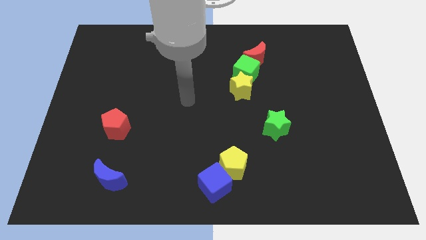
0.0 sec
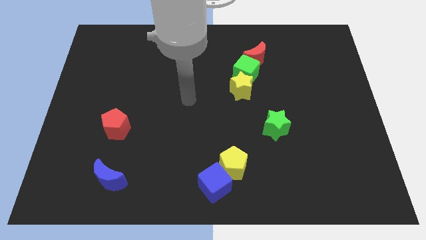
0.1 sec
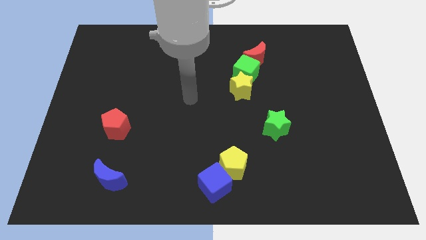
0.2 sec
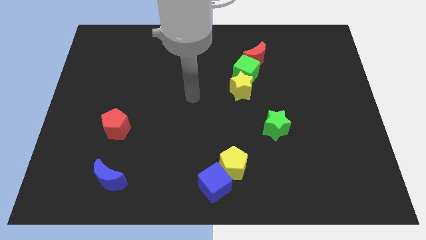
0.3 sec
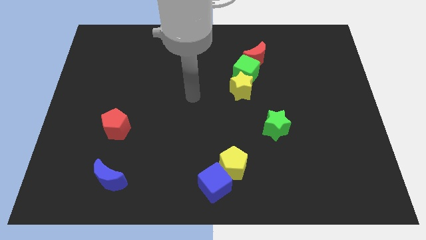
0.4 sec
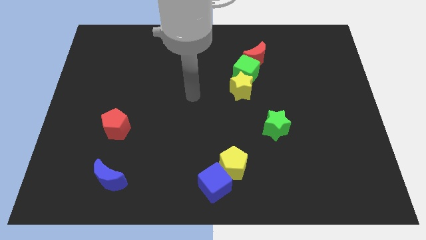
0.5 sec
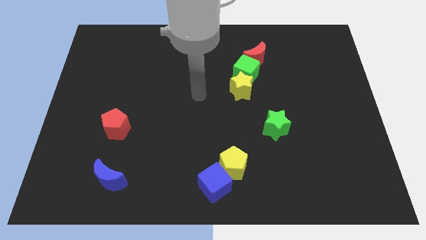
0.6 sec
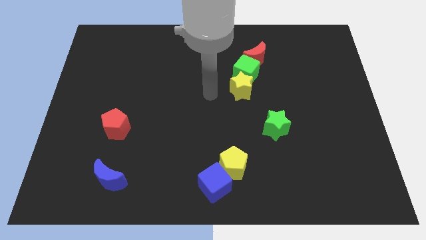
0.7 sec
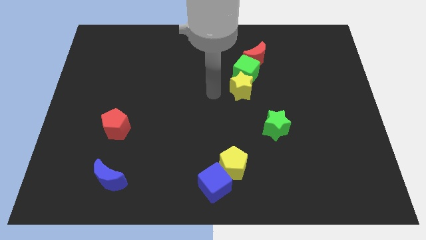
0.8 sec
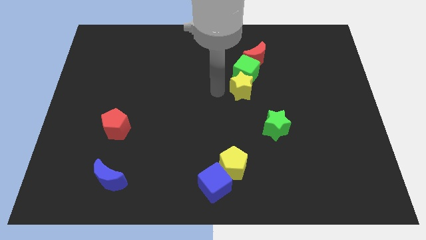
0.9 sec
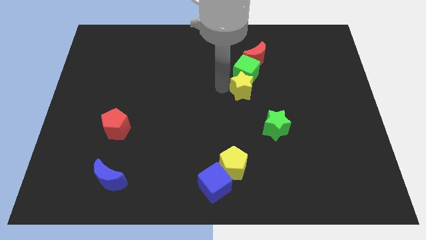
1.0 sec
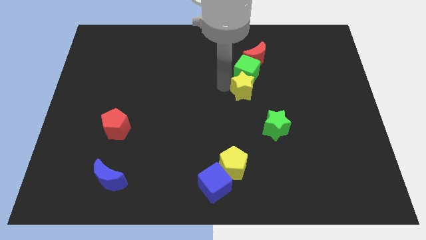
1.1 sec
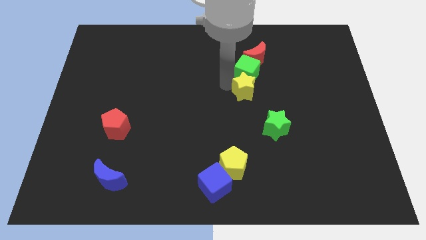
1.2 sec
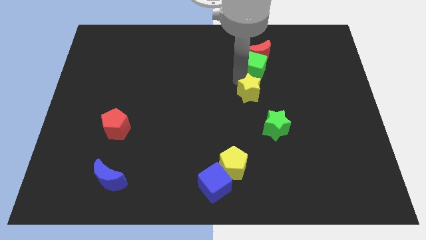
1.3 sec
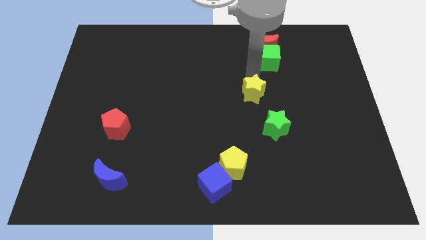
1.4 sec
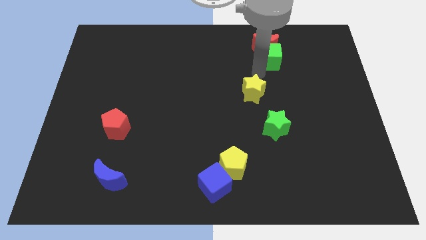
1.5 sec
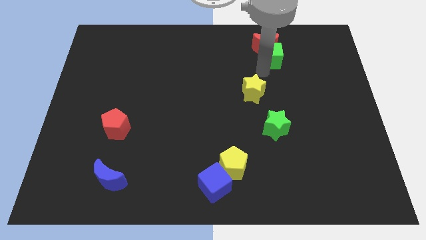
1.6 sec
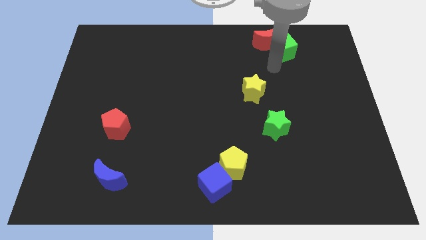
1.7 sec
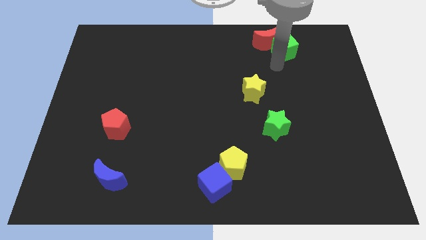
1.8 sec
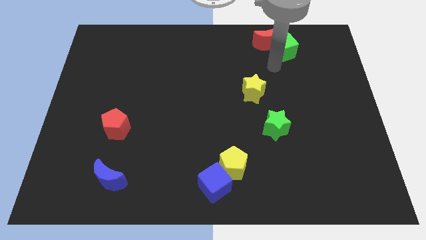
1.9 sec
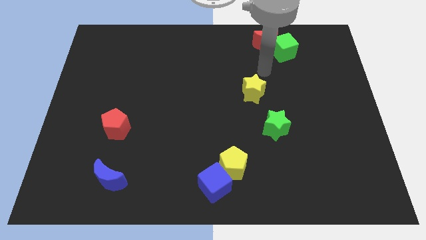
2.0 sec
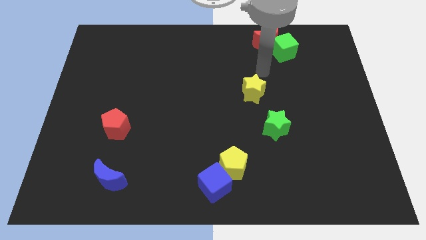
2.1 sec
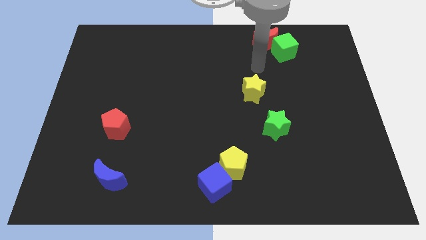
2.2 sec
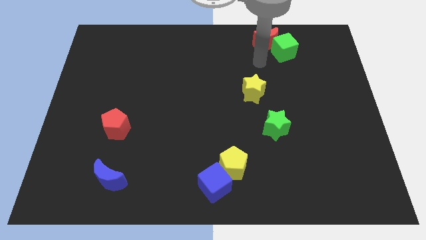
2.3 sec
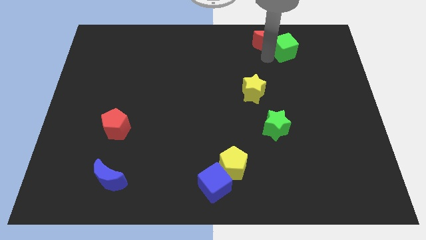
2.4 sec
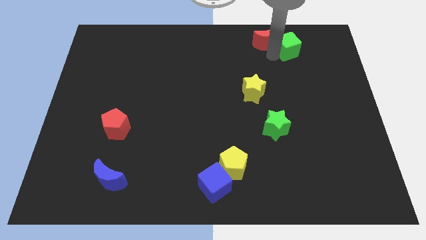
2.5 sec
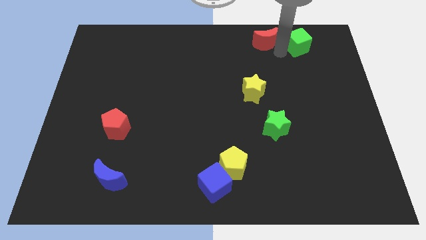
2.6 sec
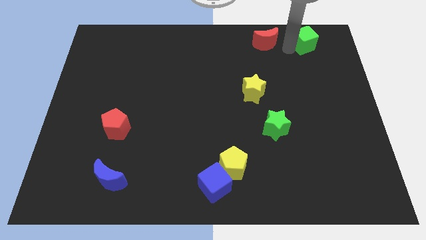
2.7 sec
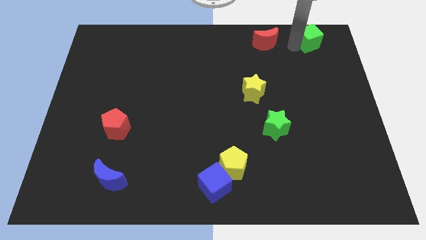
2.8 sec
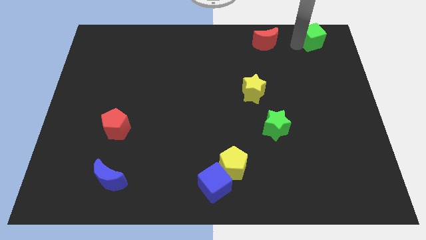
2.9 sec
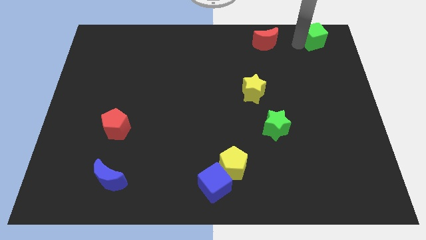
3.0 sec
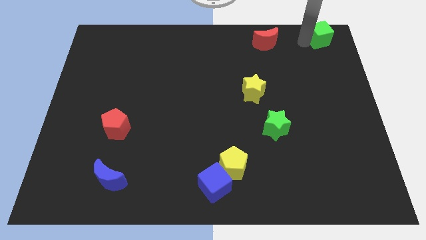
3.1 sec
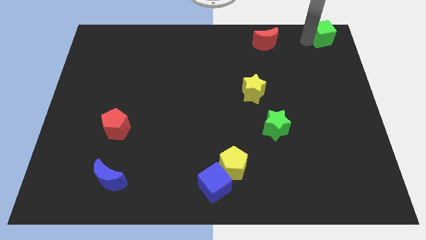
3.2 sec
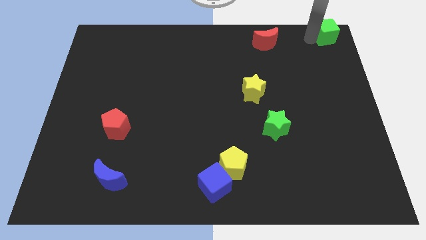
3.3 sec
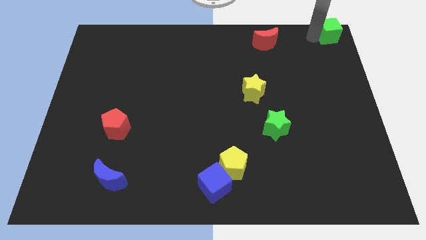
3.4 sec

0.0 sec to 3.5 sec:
move green cube towards right top corner of the board

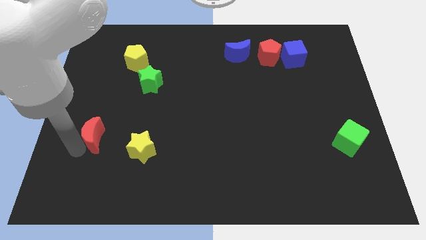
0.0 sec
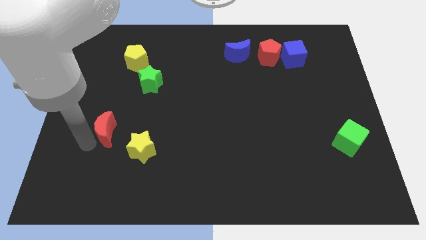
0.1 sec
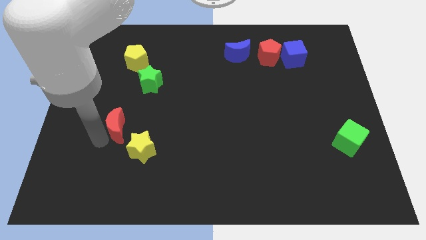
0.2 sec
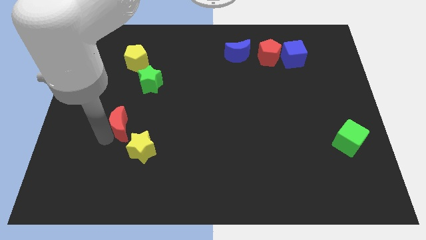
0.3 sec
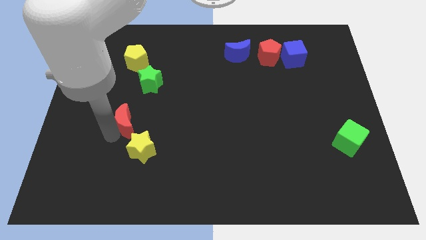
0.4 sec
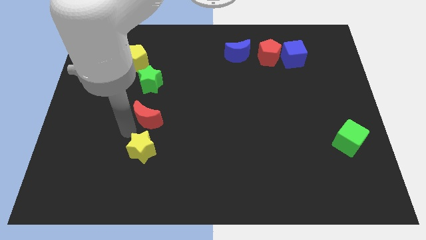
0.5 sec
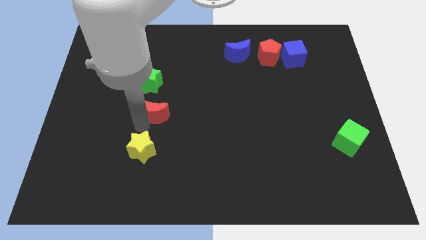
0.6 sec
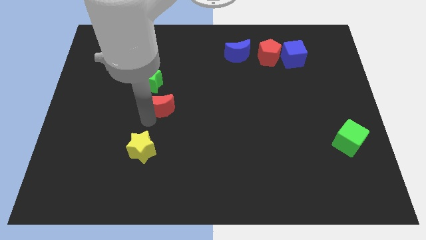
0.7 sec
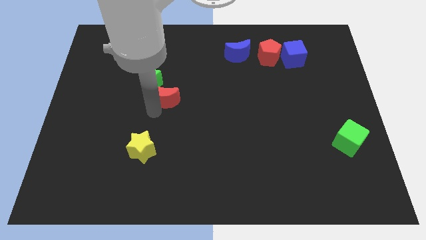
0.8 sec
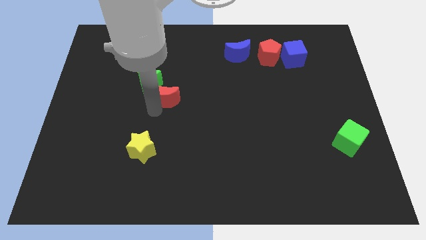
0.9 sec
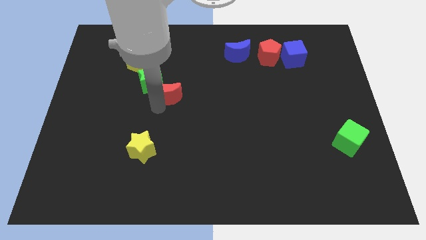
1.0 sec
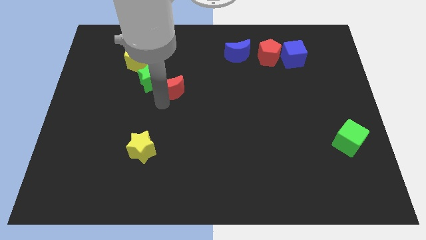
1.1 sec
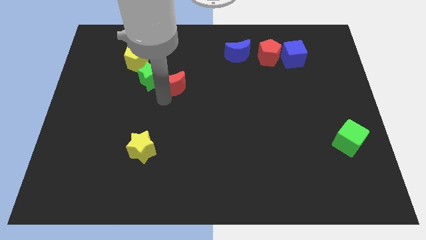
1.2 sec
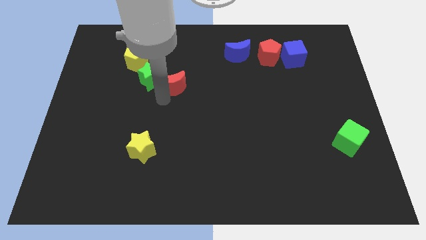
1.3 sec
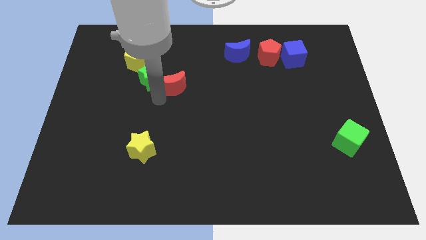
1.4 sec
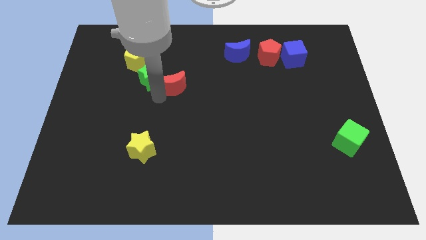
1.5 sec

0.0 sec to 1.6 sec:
push the red crescent into green star

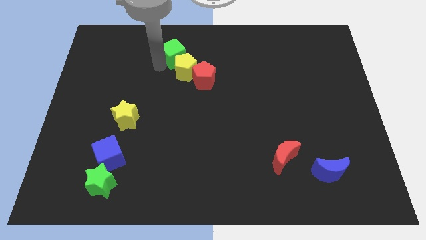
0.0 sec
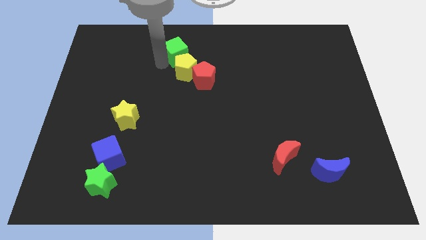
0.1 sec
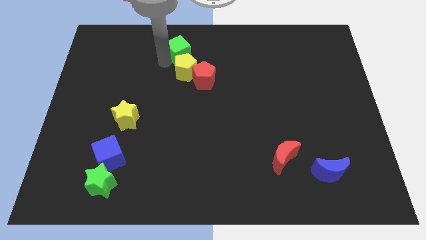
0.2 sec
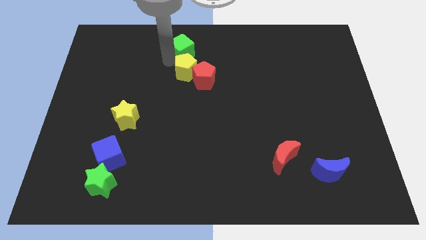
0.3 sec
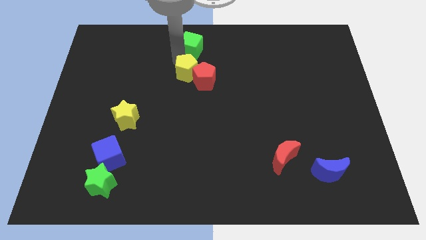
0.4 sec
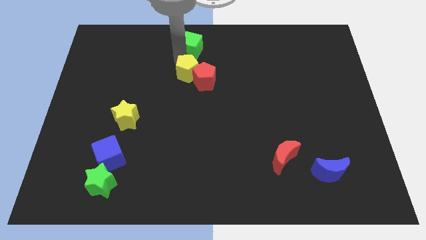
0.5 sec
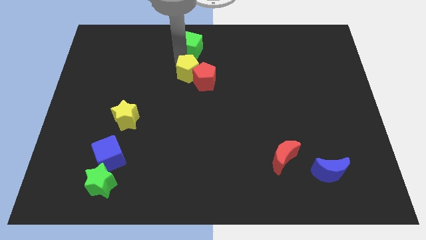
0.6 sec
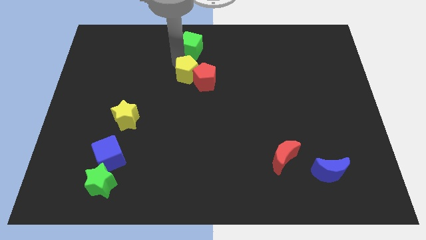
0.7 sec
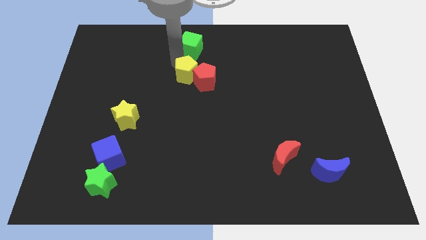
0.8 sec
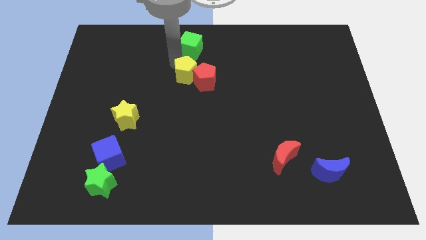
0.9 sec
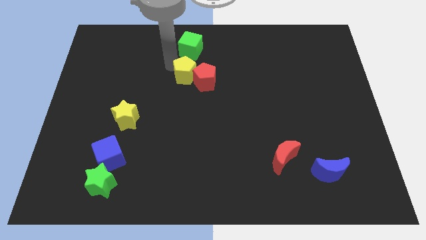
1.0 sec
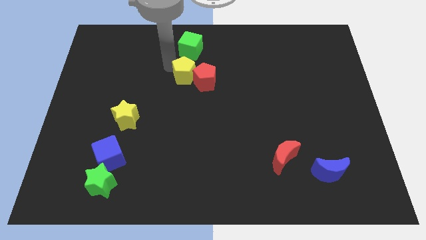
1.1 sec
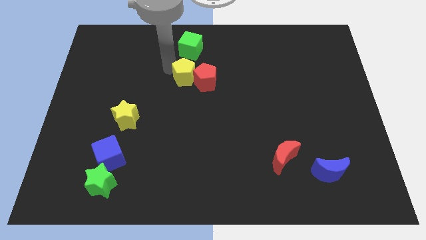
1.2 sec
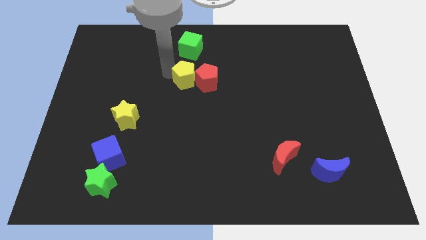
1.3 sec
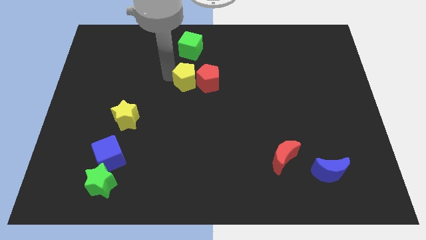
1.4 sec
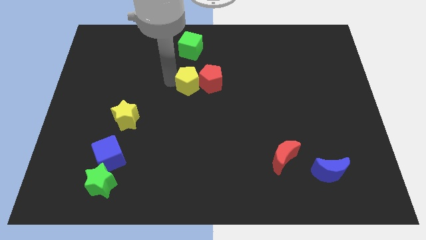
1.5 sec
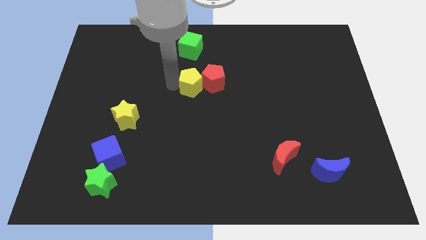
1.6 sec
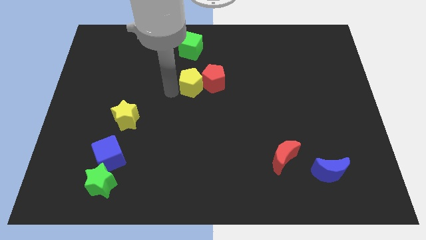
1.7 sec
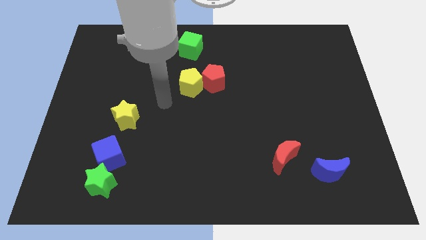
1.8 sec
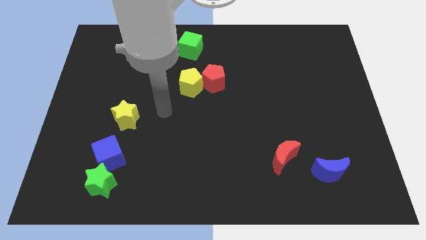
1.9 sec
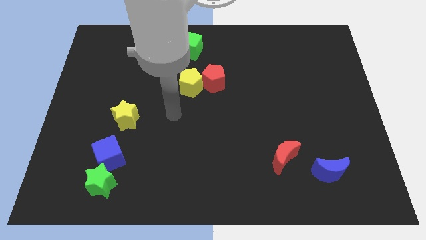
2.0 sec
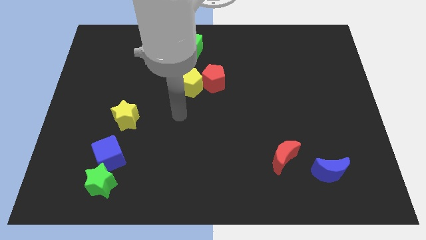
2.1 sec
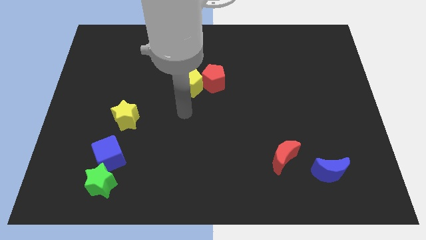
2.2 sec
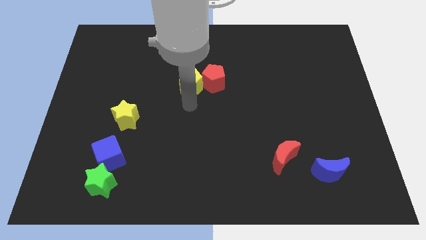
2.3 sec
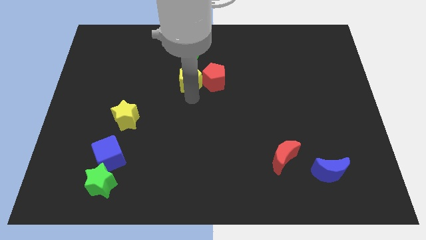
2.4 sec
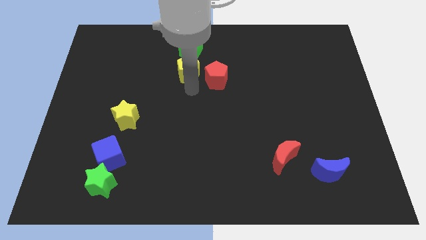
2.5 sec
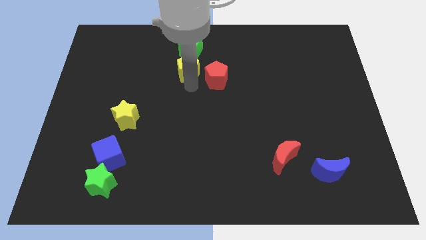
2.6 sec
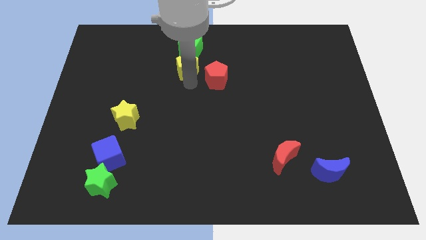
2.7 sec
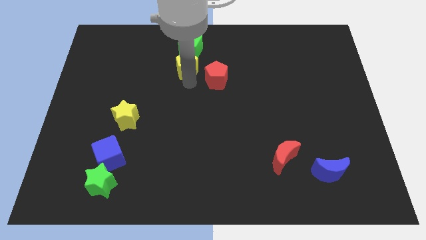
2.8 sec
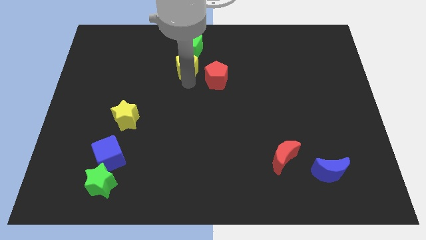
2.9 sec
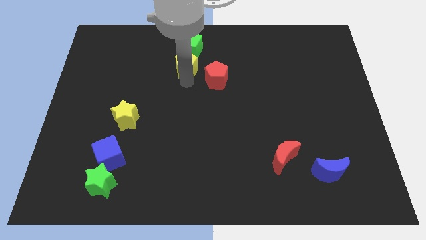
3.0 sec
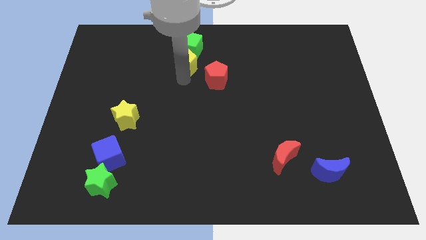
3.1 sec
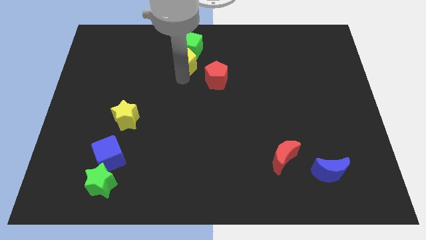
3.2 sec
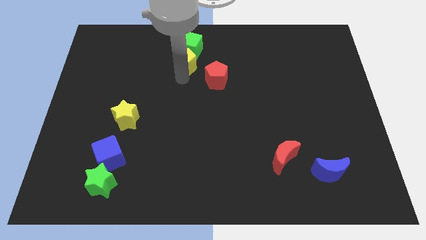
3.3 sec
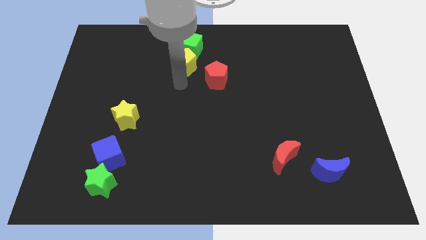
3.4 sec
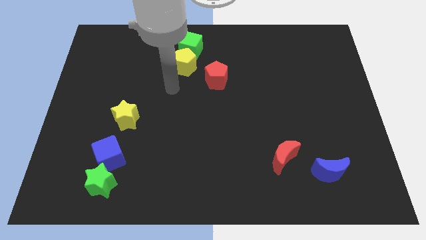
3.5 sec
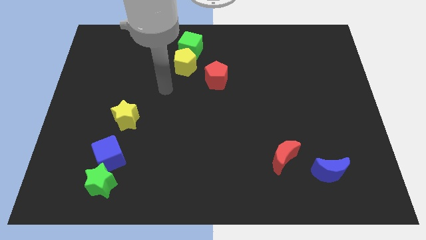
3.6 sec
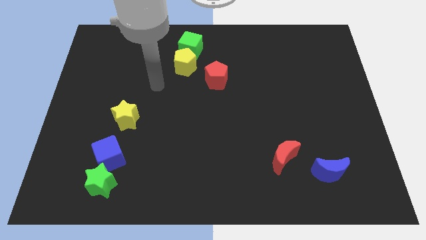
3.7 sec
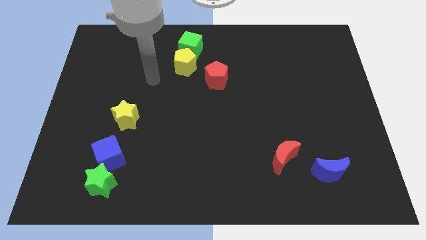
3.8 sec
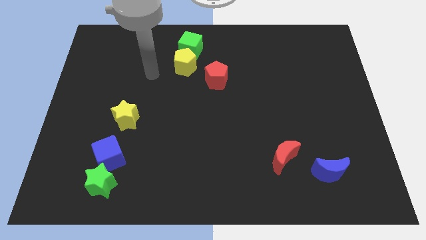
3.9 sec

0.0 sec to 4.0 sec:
place the yellow pentagon down to the green cube
